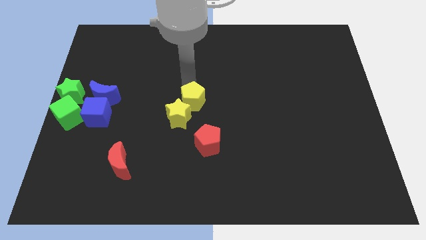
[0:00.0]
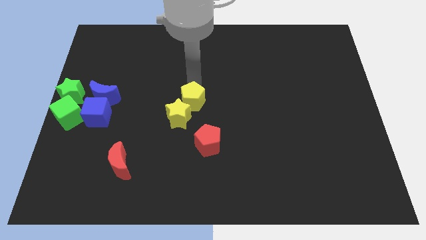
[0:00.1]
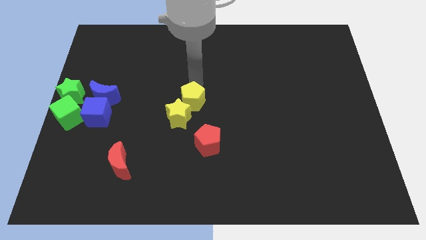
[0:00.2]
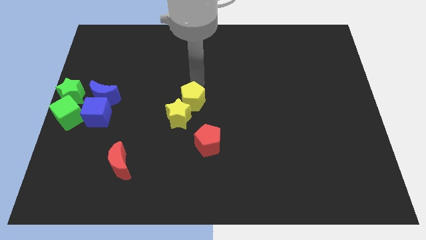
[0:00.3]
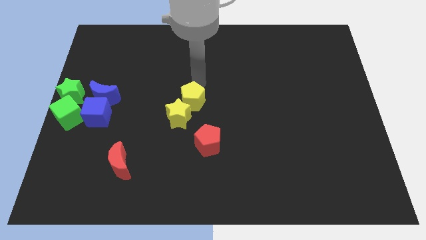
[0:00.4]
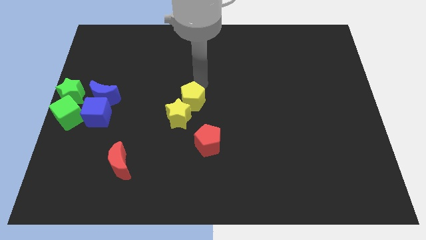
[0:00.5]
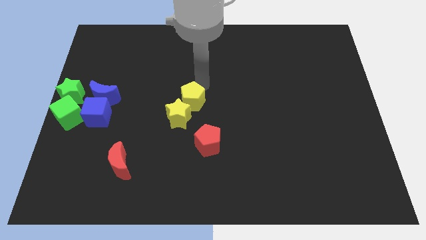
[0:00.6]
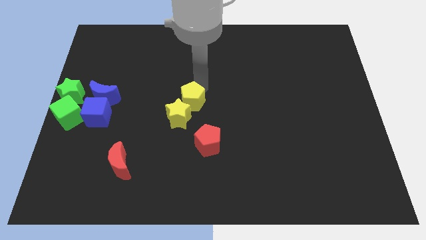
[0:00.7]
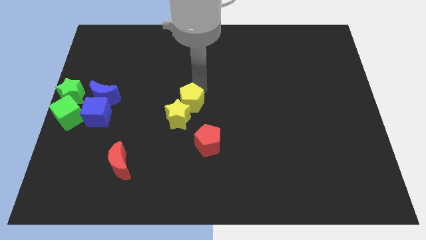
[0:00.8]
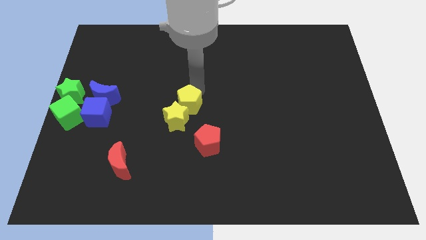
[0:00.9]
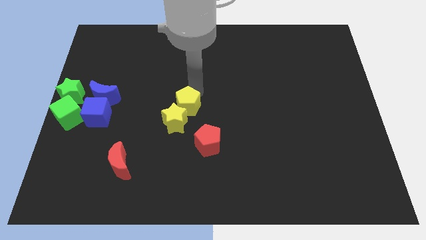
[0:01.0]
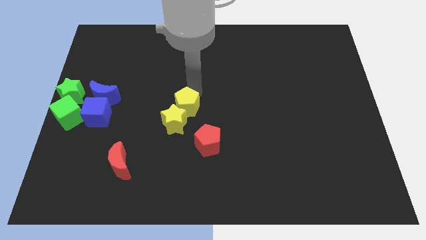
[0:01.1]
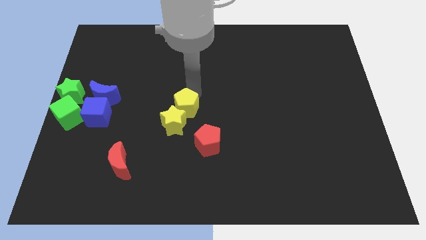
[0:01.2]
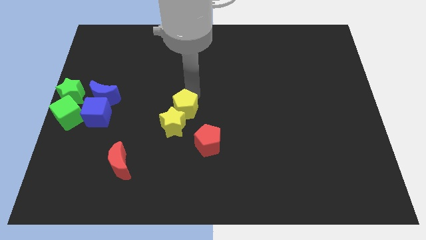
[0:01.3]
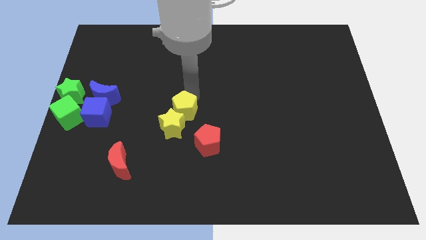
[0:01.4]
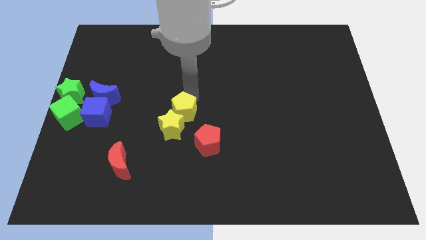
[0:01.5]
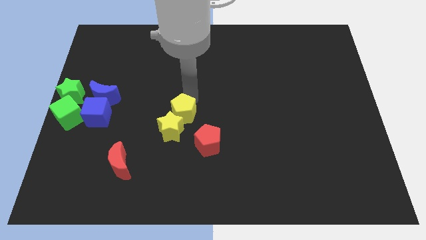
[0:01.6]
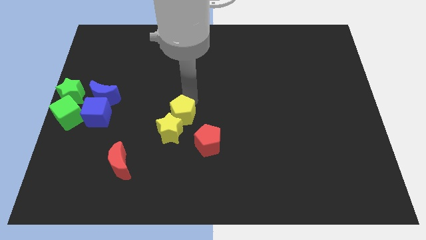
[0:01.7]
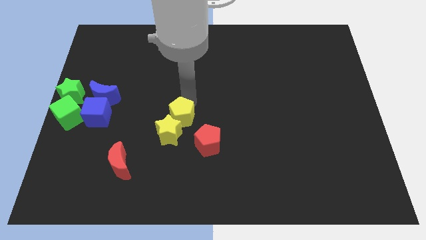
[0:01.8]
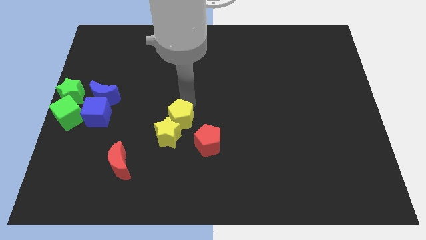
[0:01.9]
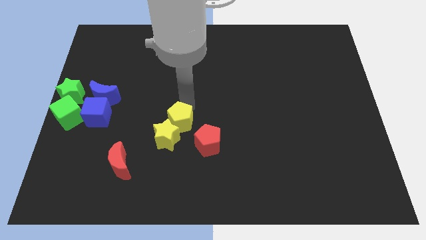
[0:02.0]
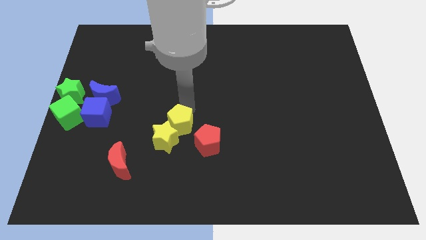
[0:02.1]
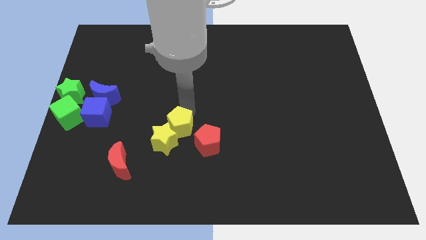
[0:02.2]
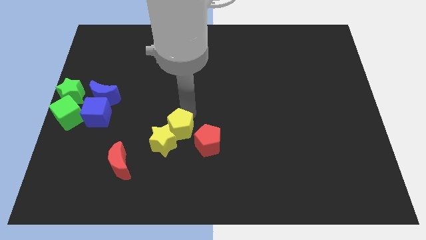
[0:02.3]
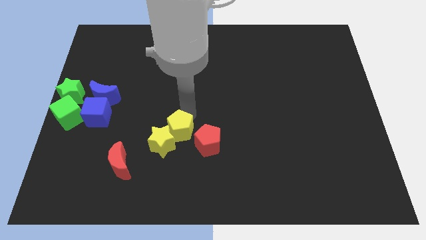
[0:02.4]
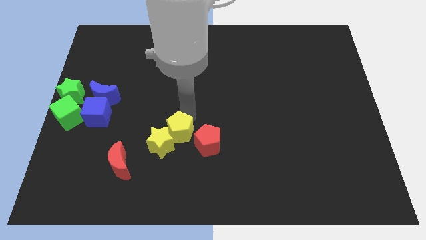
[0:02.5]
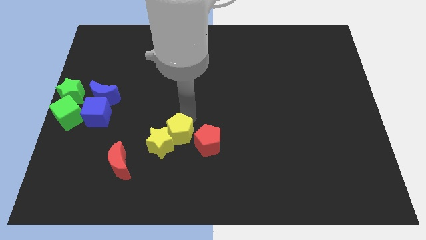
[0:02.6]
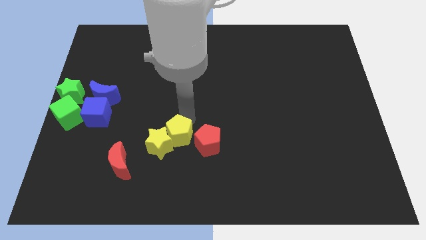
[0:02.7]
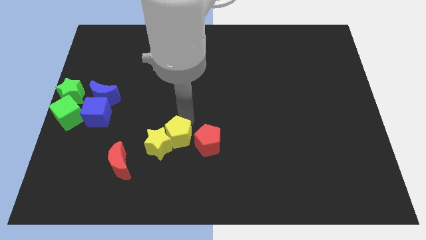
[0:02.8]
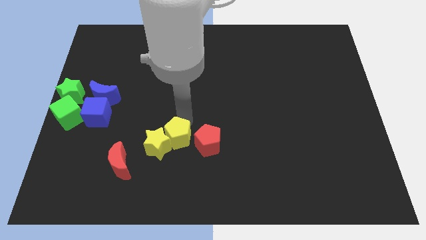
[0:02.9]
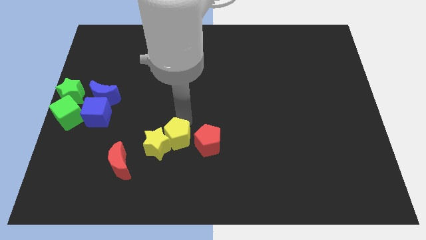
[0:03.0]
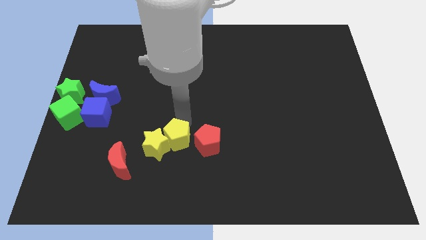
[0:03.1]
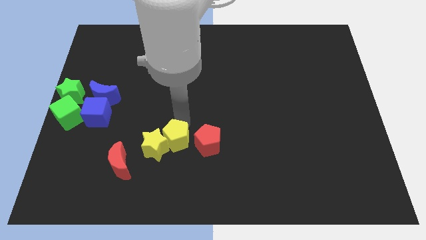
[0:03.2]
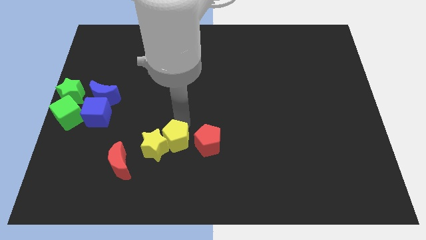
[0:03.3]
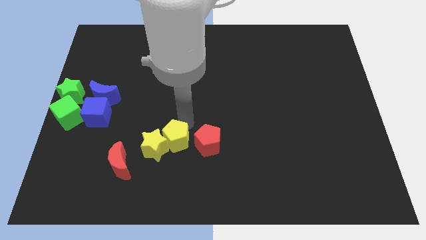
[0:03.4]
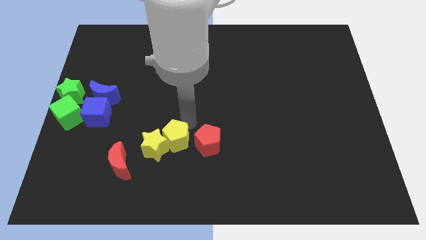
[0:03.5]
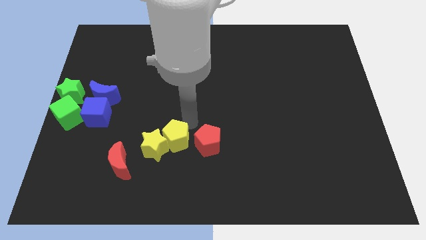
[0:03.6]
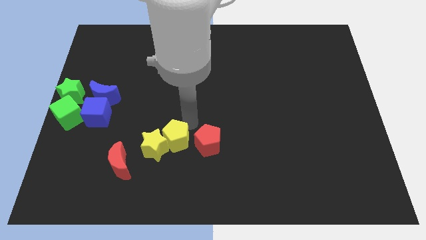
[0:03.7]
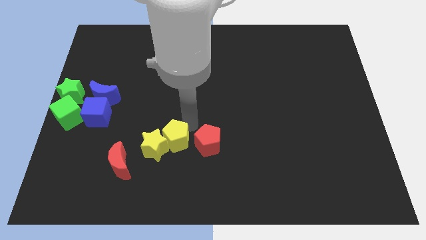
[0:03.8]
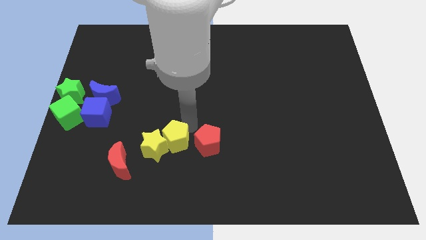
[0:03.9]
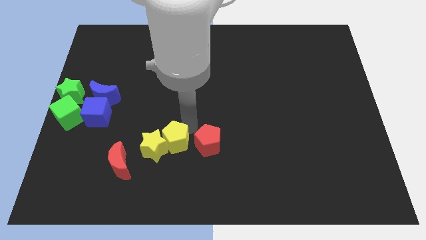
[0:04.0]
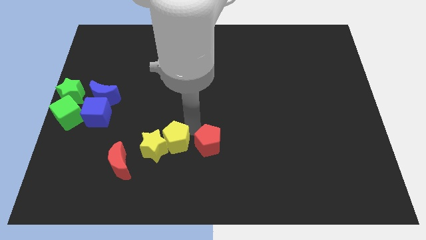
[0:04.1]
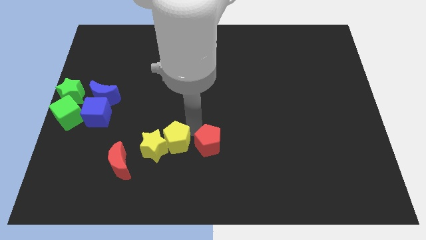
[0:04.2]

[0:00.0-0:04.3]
push the yellow star to the bottom of the board with the yellow pentagon

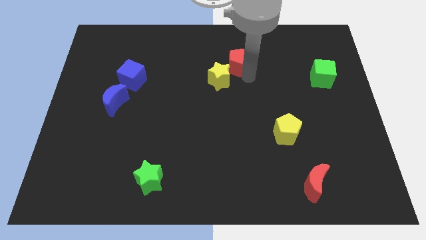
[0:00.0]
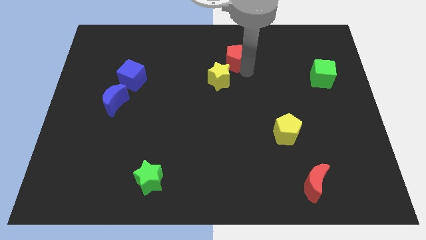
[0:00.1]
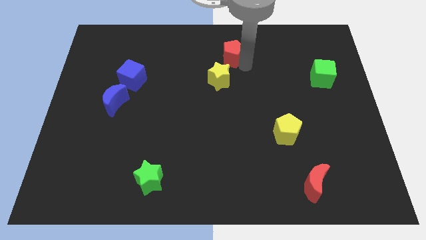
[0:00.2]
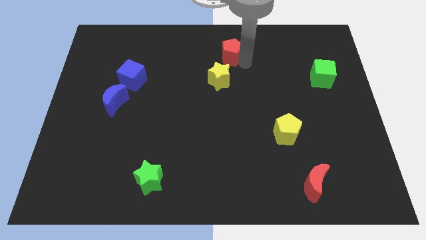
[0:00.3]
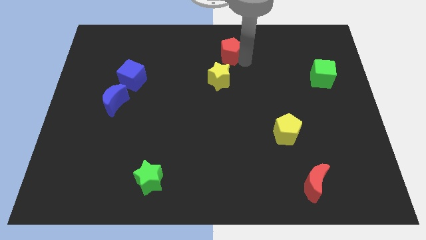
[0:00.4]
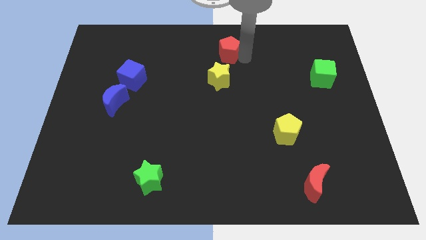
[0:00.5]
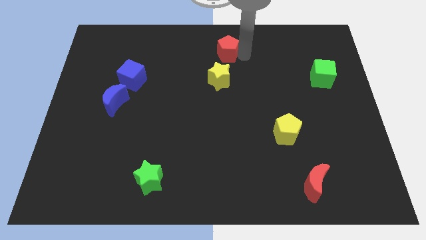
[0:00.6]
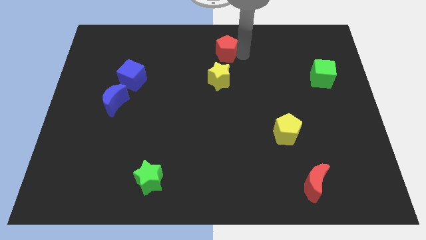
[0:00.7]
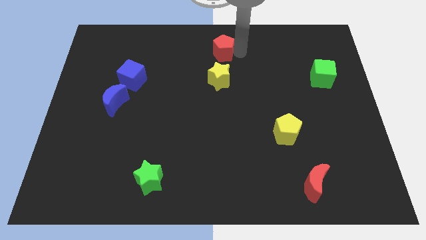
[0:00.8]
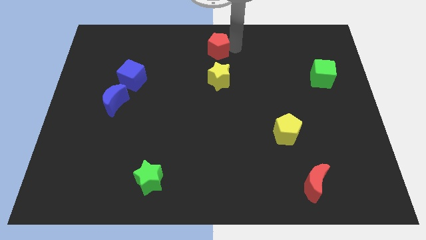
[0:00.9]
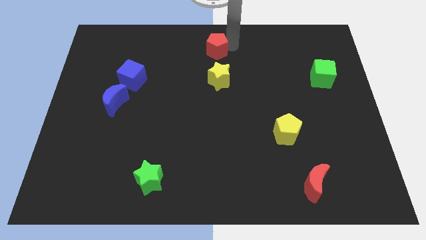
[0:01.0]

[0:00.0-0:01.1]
put the red pentagon vertically above the yellow star
